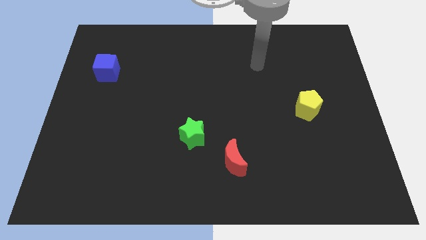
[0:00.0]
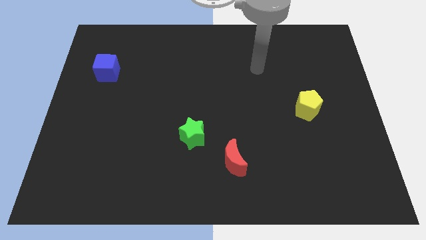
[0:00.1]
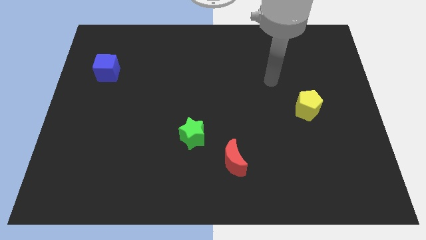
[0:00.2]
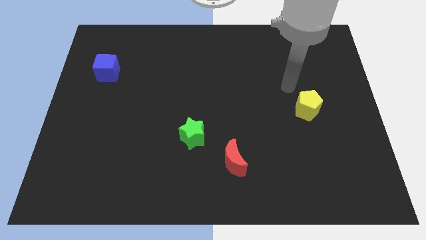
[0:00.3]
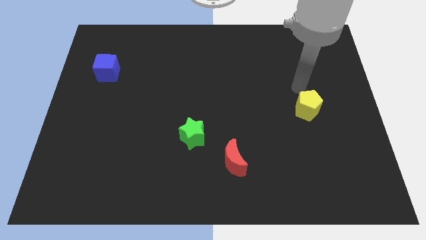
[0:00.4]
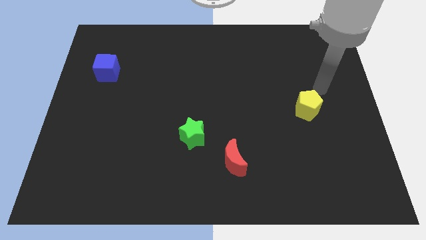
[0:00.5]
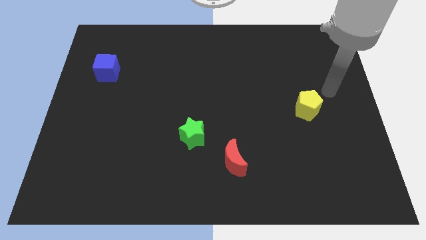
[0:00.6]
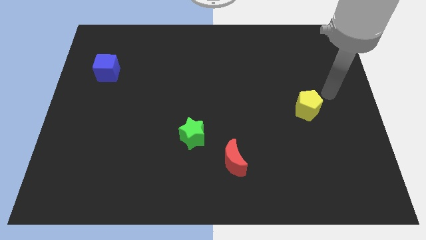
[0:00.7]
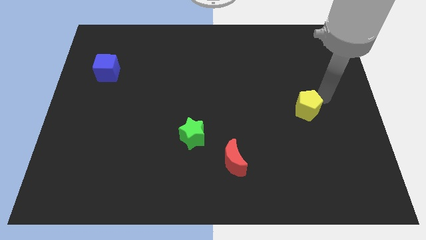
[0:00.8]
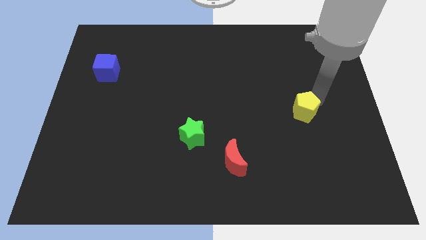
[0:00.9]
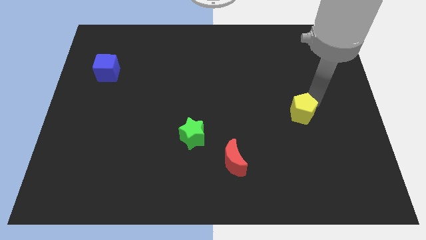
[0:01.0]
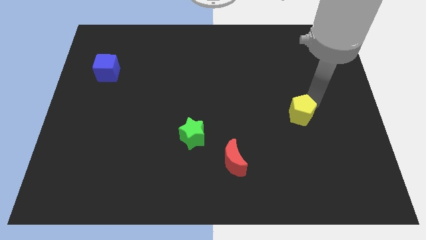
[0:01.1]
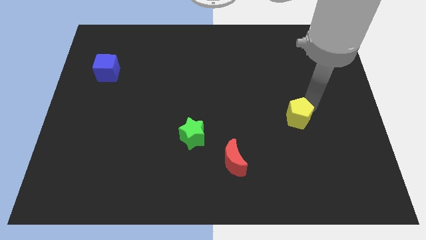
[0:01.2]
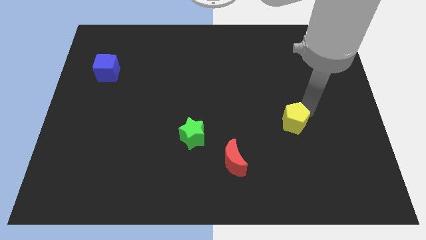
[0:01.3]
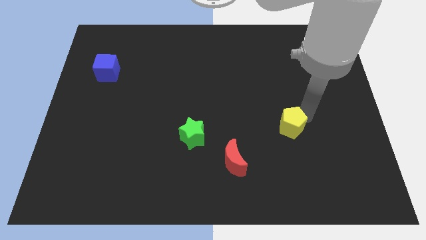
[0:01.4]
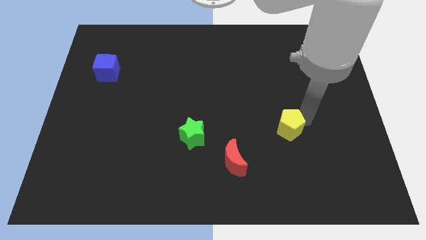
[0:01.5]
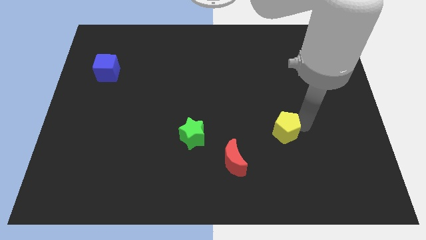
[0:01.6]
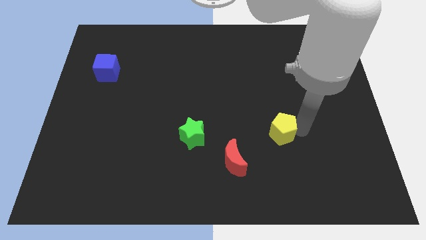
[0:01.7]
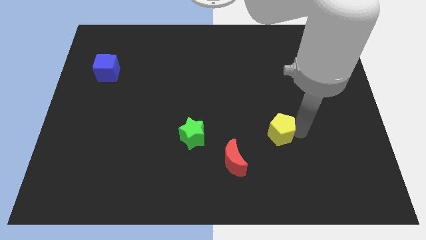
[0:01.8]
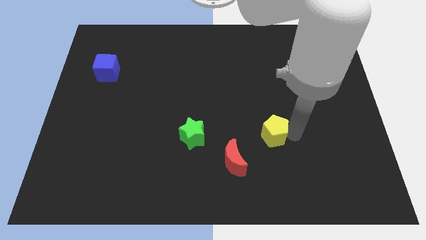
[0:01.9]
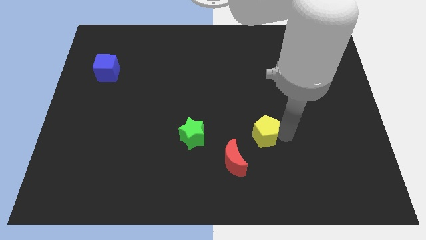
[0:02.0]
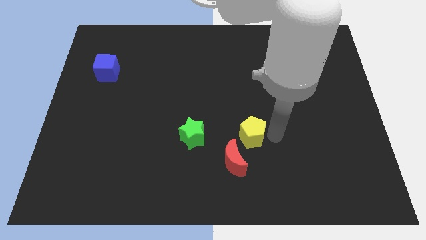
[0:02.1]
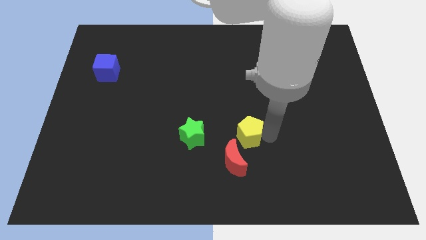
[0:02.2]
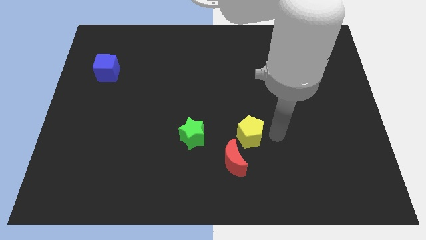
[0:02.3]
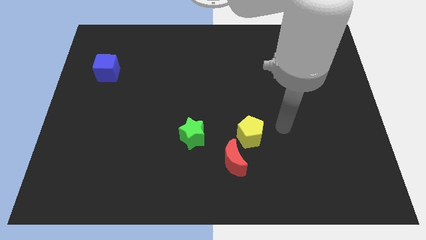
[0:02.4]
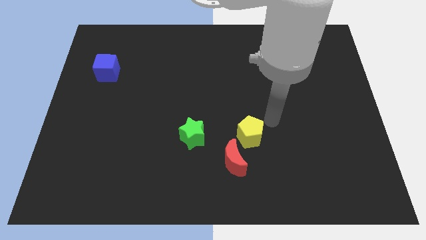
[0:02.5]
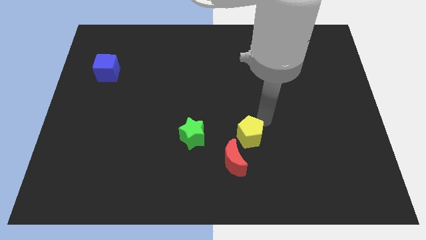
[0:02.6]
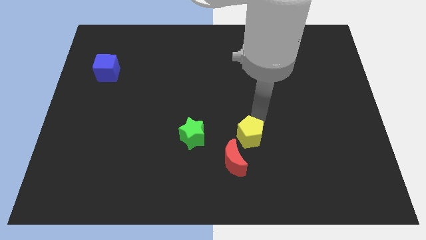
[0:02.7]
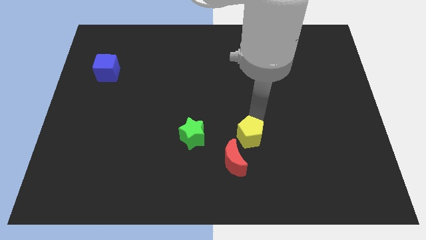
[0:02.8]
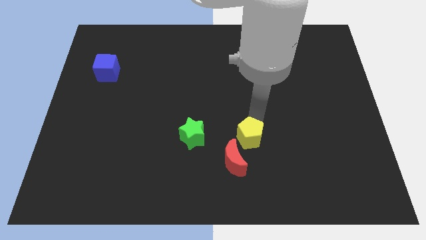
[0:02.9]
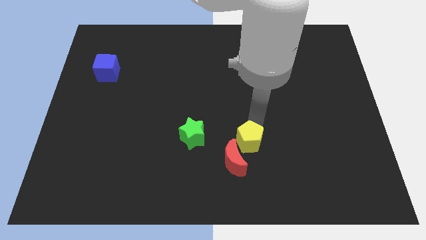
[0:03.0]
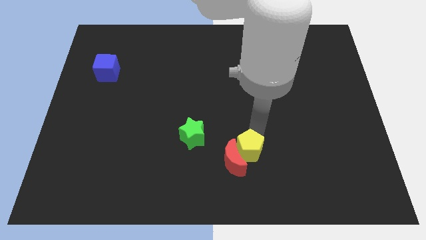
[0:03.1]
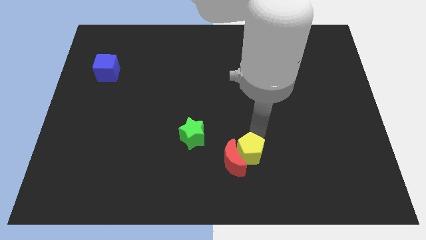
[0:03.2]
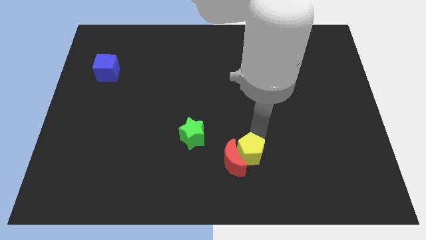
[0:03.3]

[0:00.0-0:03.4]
push the pentagon close to the moon

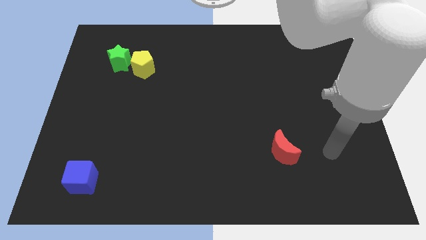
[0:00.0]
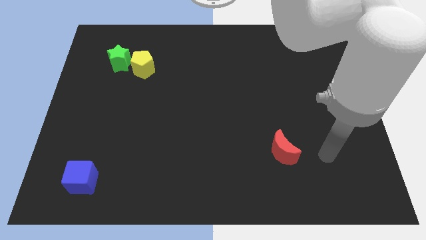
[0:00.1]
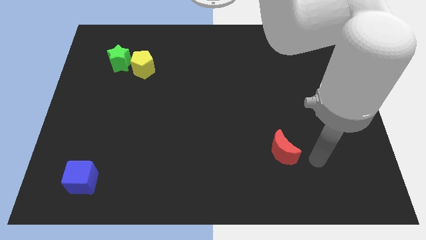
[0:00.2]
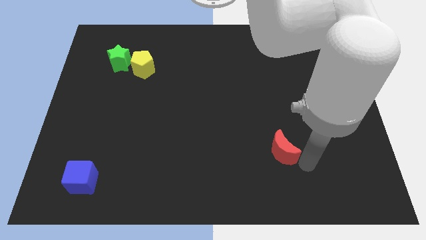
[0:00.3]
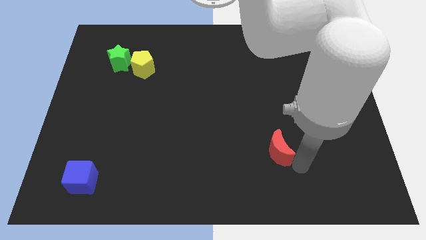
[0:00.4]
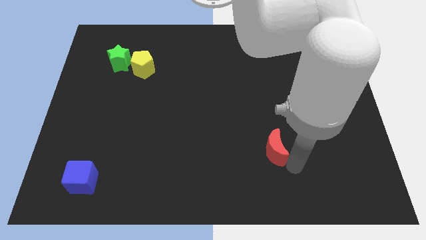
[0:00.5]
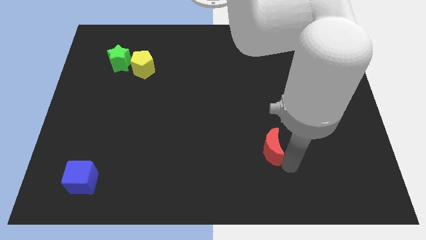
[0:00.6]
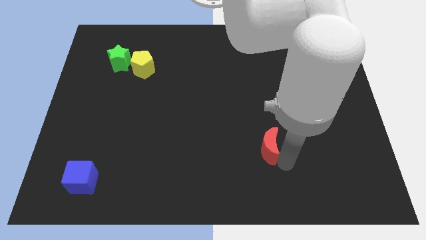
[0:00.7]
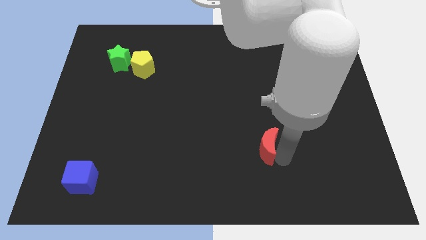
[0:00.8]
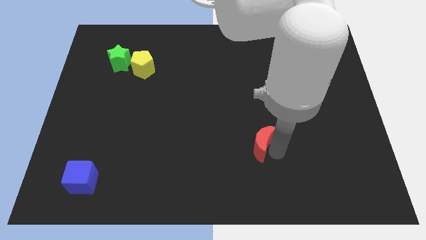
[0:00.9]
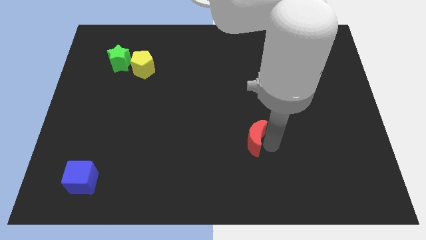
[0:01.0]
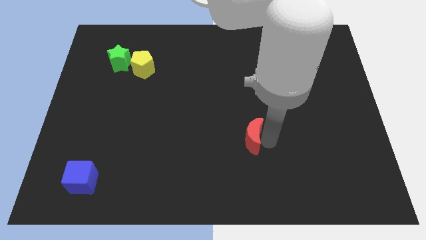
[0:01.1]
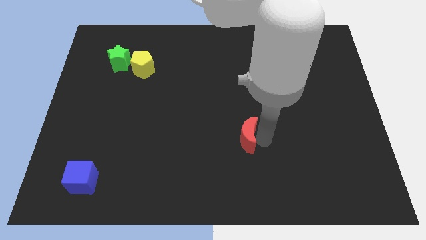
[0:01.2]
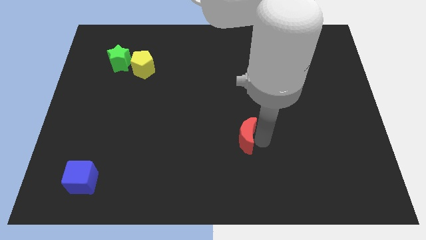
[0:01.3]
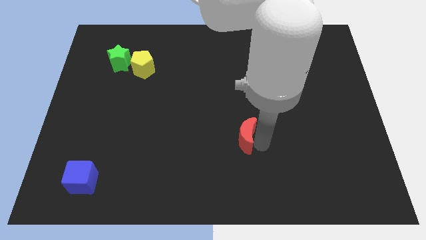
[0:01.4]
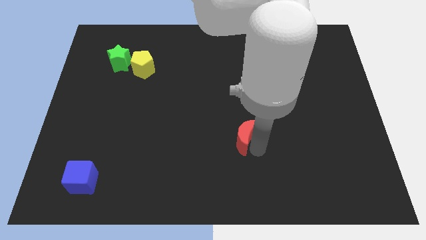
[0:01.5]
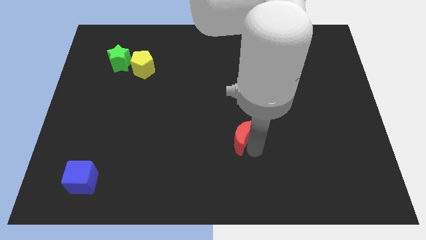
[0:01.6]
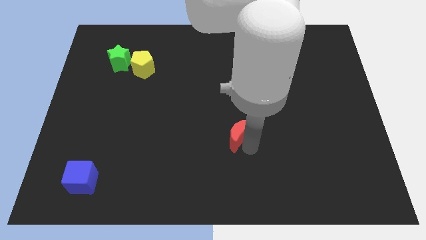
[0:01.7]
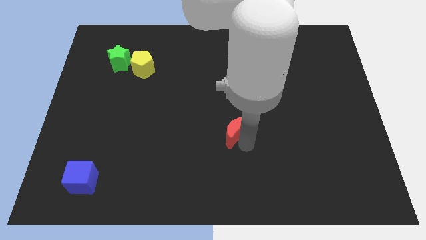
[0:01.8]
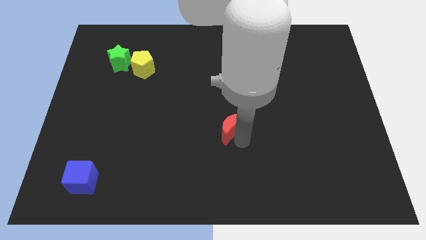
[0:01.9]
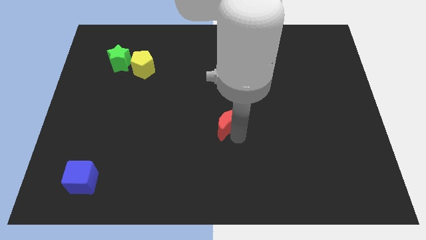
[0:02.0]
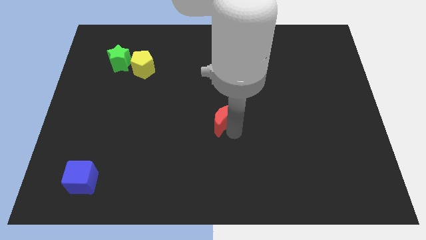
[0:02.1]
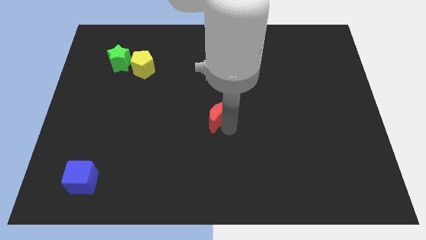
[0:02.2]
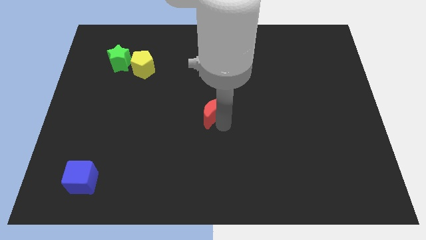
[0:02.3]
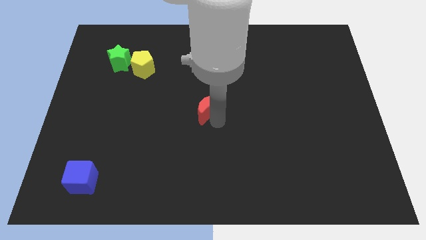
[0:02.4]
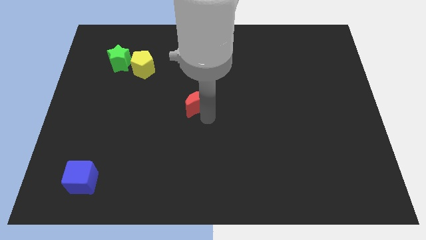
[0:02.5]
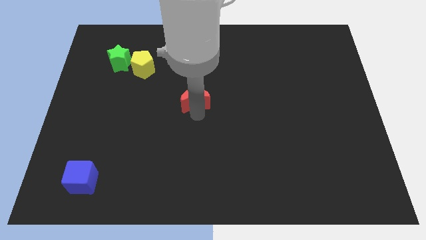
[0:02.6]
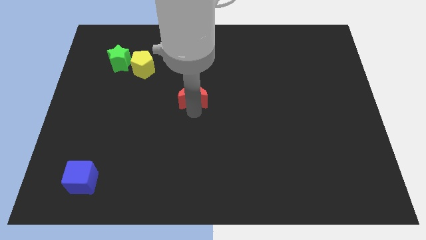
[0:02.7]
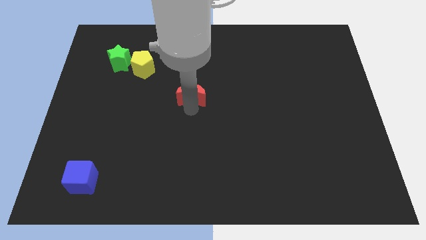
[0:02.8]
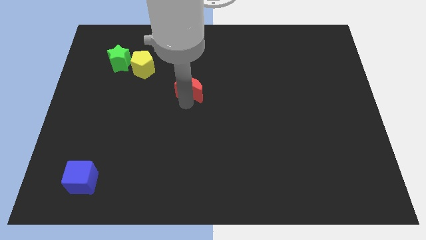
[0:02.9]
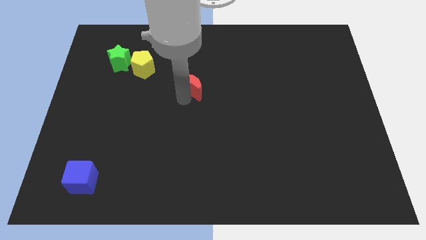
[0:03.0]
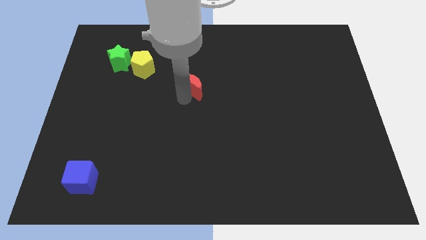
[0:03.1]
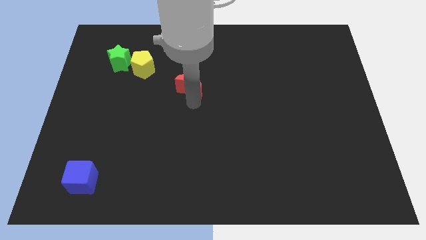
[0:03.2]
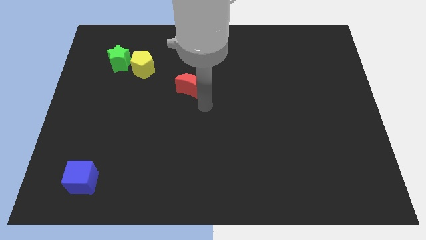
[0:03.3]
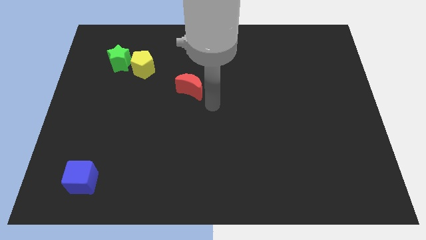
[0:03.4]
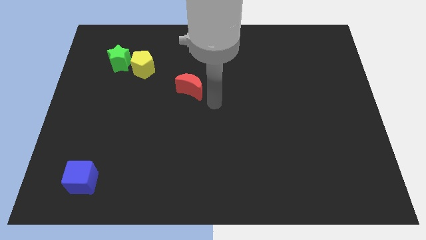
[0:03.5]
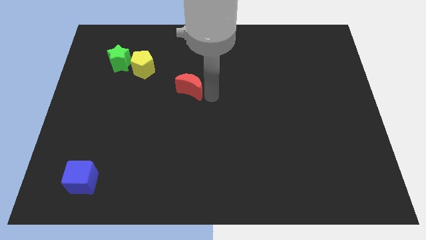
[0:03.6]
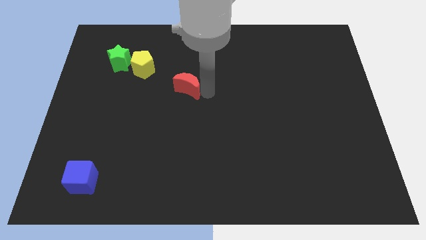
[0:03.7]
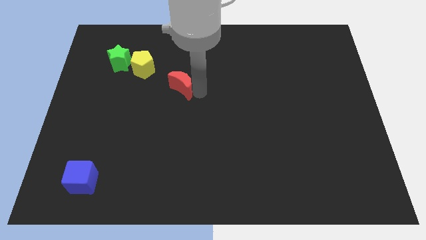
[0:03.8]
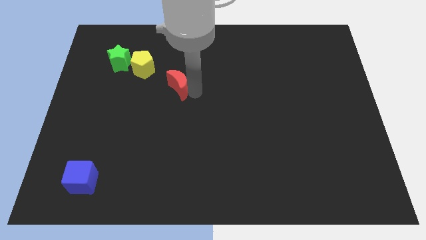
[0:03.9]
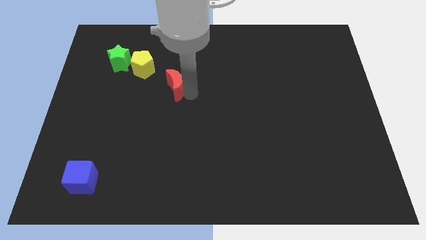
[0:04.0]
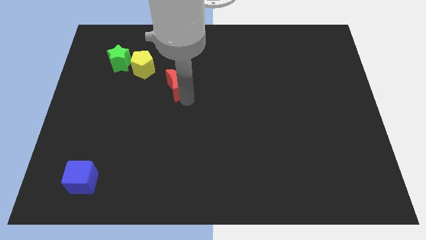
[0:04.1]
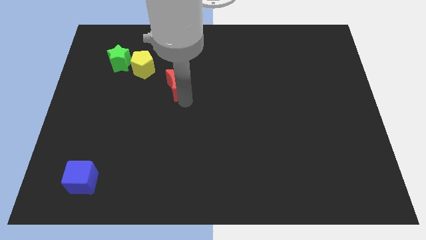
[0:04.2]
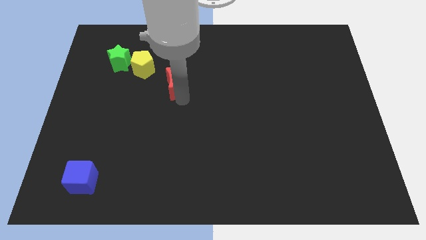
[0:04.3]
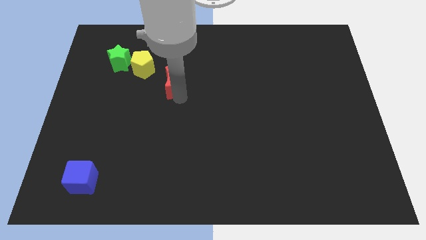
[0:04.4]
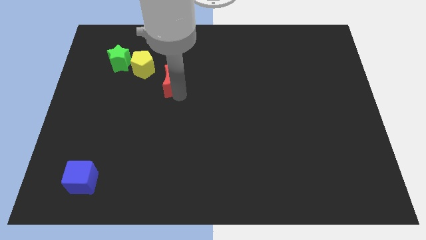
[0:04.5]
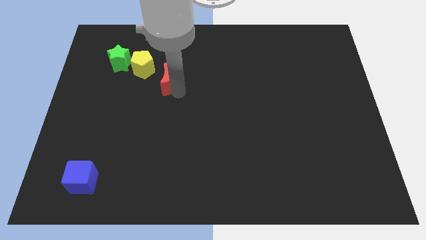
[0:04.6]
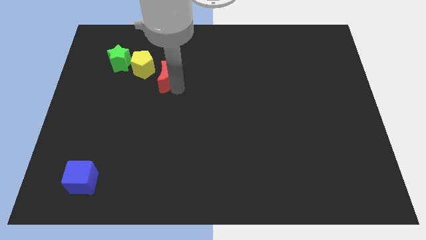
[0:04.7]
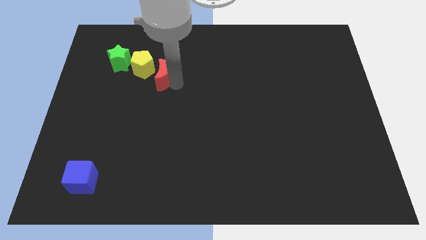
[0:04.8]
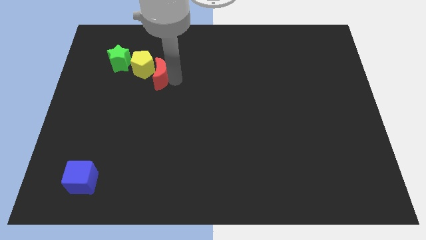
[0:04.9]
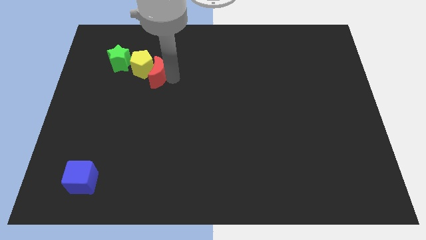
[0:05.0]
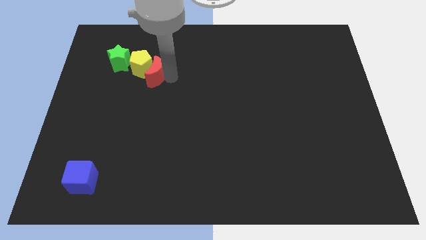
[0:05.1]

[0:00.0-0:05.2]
slide the moon towards the pentagon
